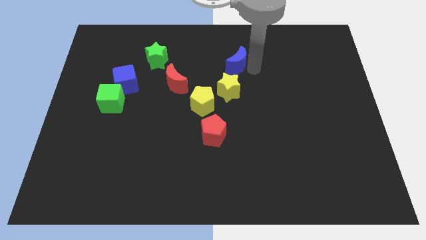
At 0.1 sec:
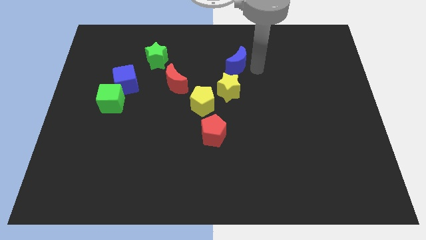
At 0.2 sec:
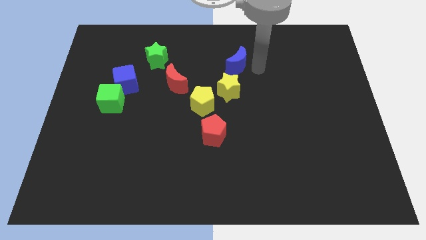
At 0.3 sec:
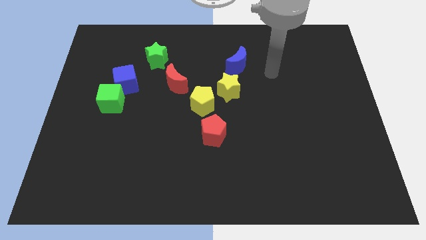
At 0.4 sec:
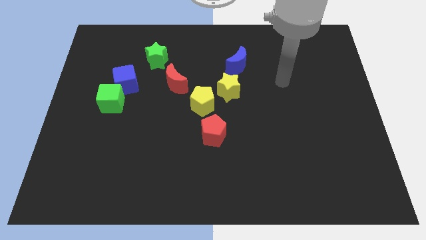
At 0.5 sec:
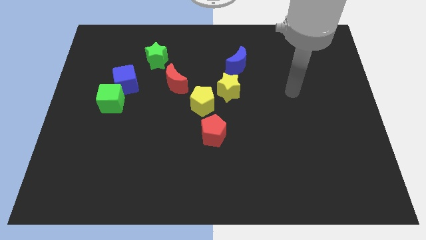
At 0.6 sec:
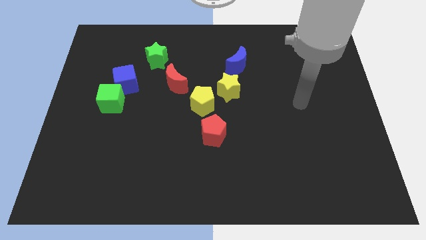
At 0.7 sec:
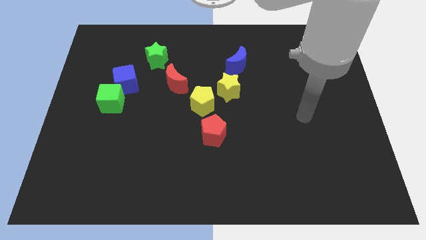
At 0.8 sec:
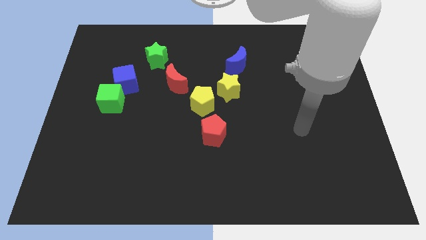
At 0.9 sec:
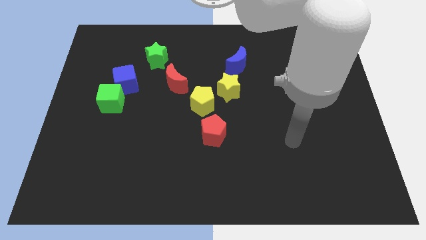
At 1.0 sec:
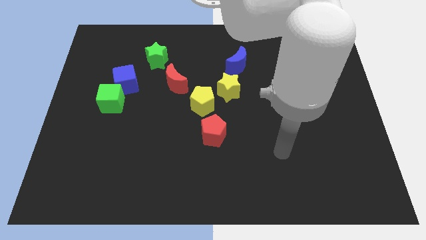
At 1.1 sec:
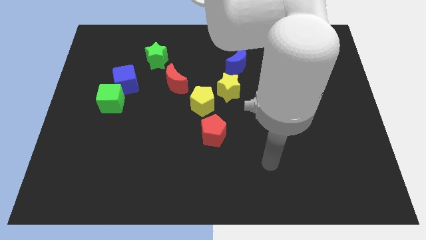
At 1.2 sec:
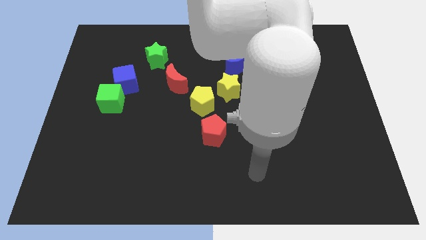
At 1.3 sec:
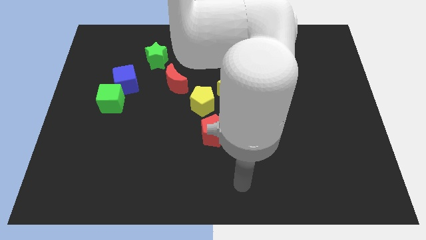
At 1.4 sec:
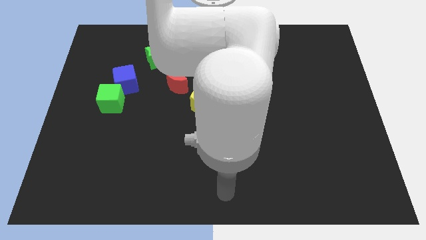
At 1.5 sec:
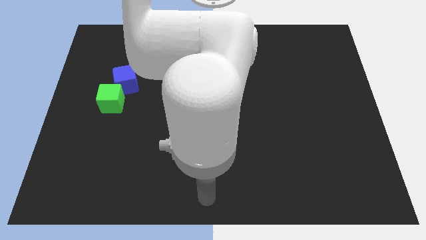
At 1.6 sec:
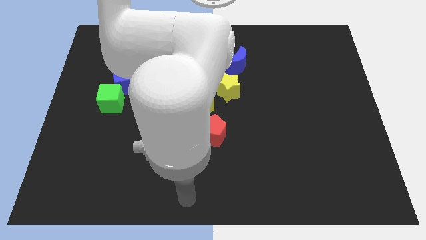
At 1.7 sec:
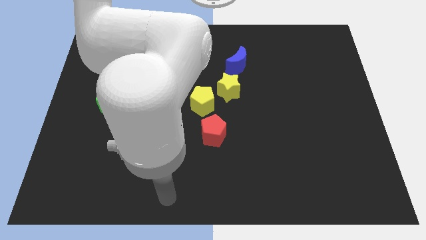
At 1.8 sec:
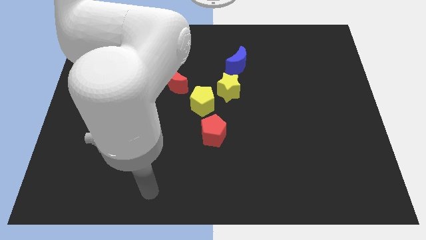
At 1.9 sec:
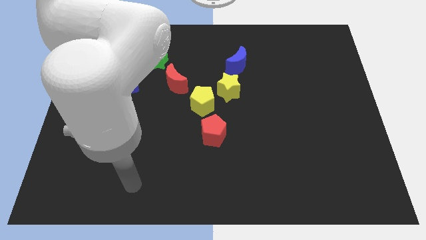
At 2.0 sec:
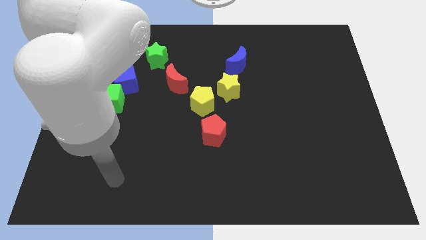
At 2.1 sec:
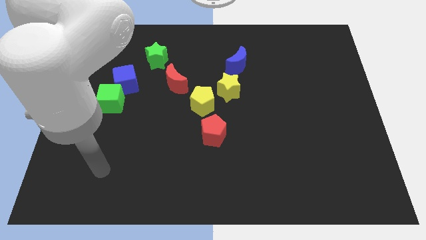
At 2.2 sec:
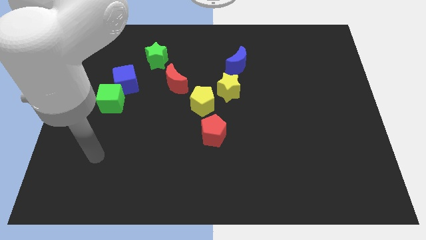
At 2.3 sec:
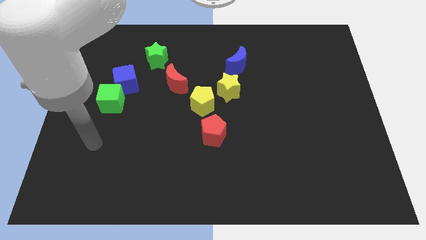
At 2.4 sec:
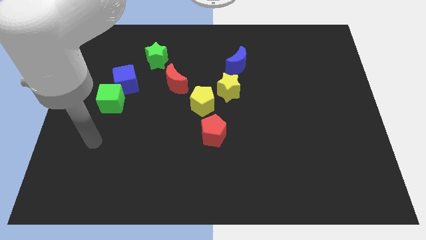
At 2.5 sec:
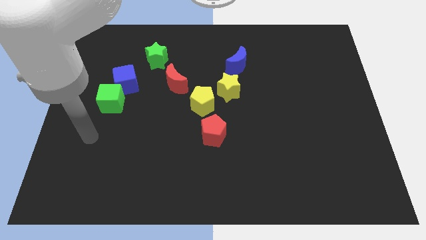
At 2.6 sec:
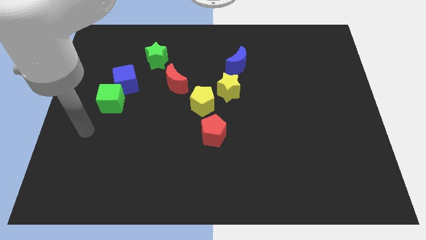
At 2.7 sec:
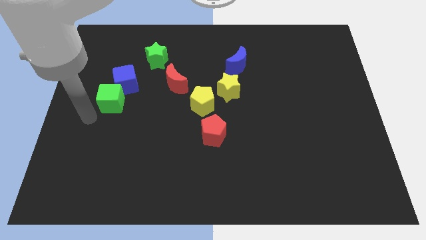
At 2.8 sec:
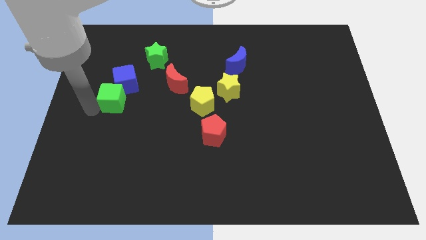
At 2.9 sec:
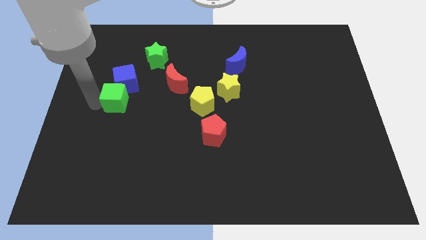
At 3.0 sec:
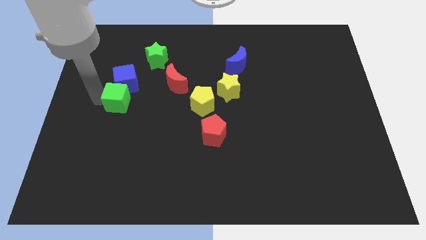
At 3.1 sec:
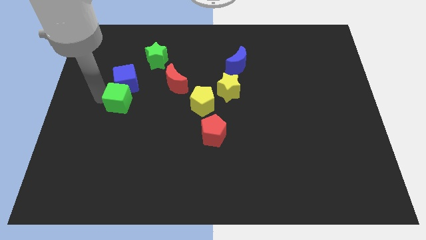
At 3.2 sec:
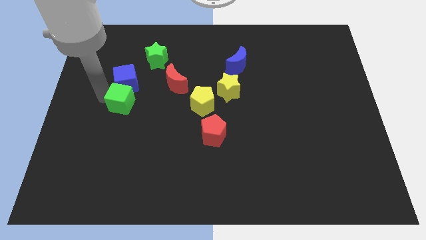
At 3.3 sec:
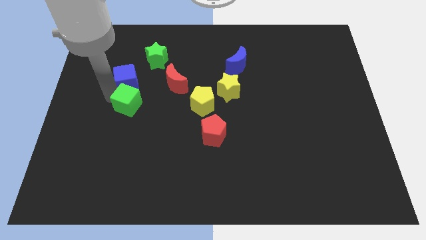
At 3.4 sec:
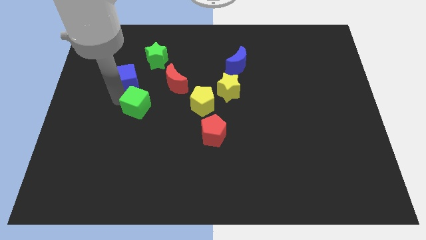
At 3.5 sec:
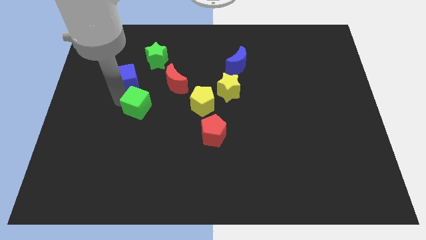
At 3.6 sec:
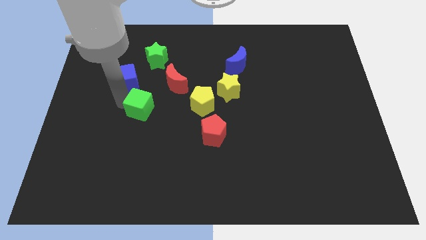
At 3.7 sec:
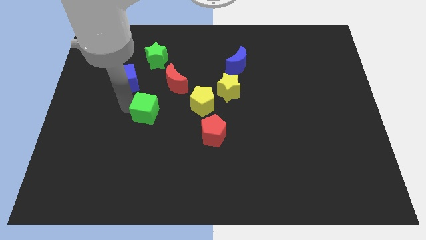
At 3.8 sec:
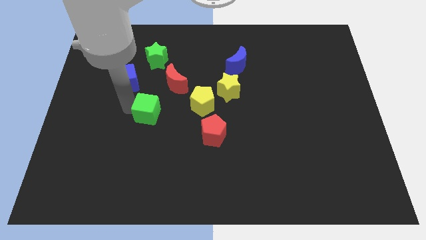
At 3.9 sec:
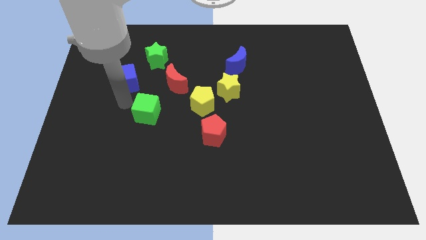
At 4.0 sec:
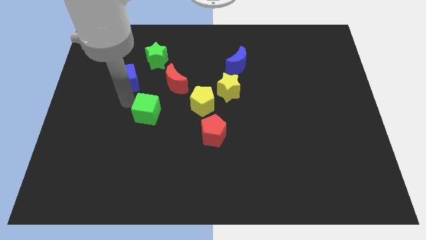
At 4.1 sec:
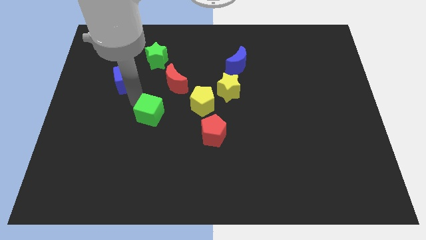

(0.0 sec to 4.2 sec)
place the green cube below the green star

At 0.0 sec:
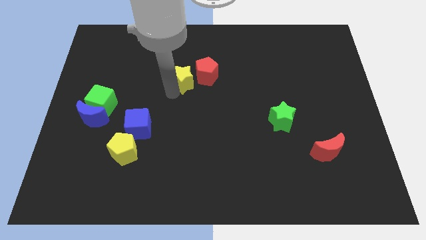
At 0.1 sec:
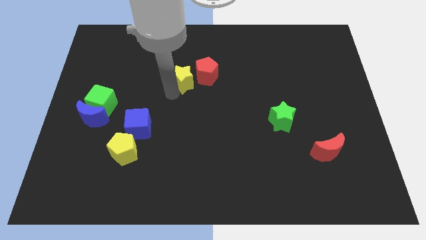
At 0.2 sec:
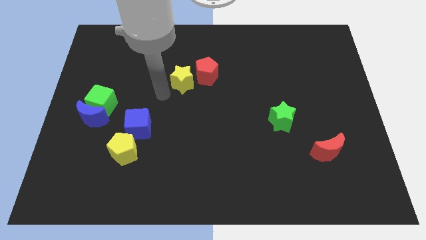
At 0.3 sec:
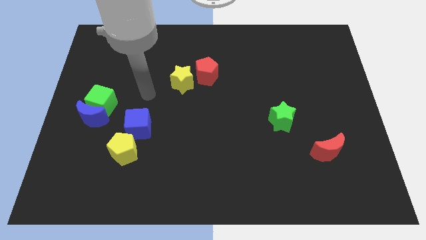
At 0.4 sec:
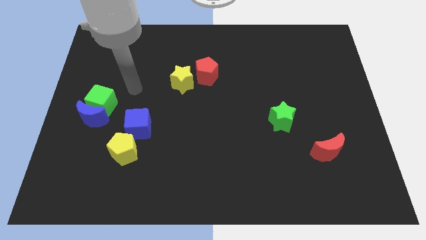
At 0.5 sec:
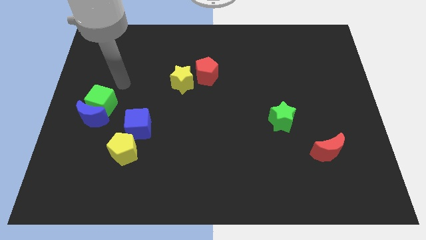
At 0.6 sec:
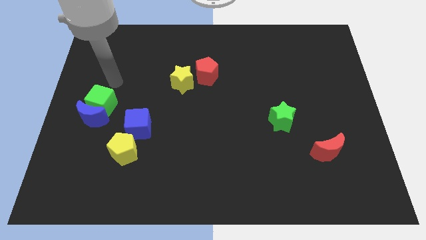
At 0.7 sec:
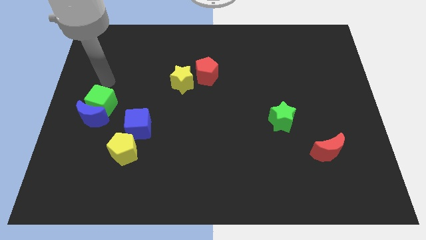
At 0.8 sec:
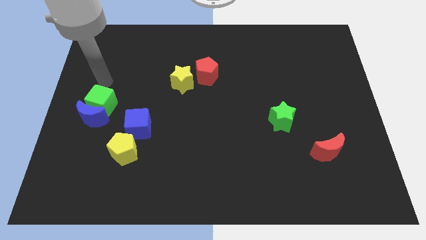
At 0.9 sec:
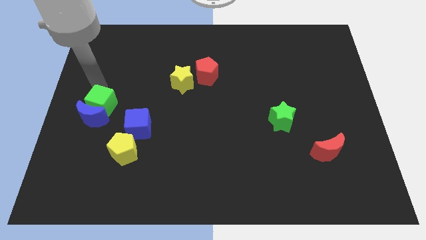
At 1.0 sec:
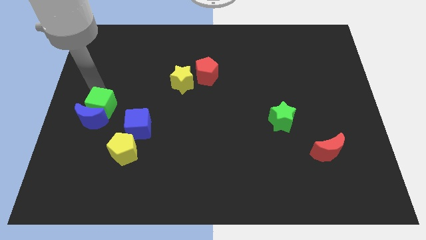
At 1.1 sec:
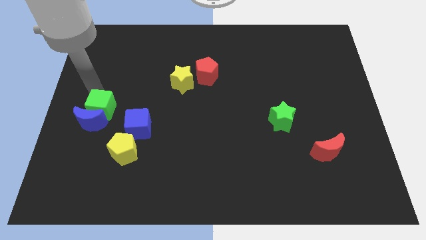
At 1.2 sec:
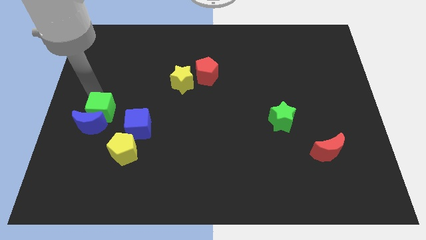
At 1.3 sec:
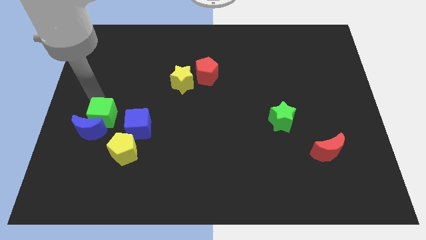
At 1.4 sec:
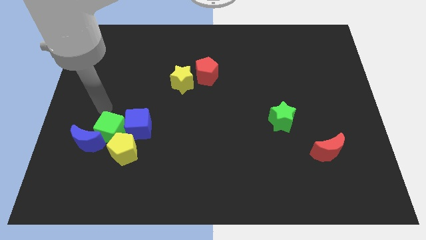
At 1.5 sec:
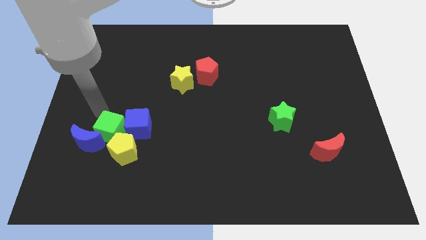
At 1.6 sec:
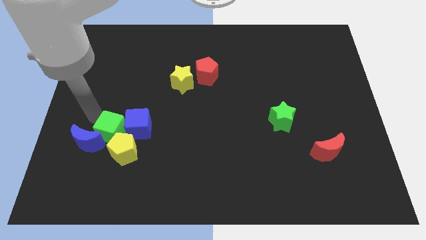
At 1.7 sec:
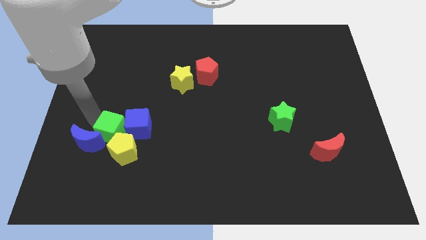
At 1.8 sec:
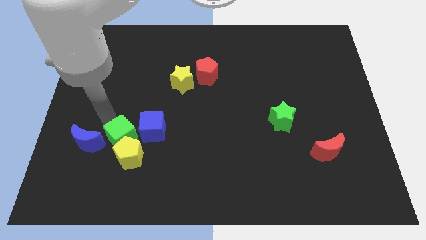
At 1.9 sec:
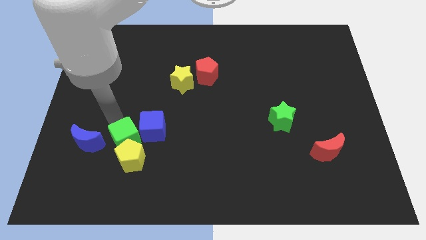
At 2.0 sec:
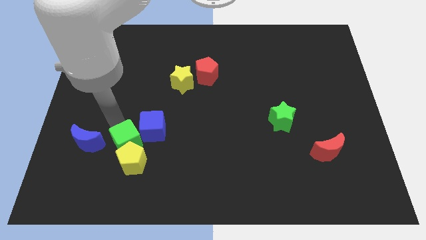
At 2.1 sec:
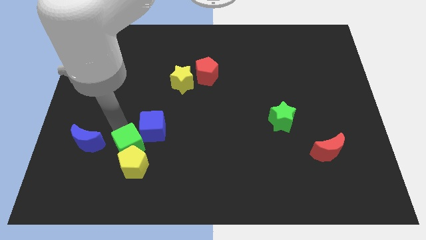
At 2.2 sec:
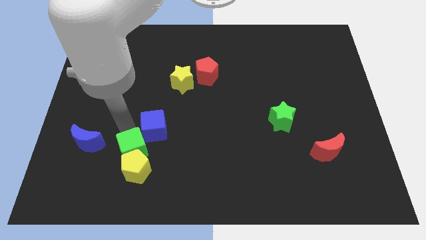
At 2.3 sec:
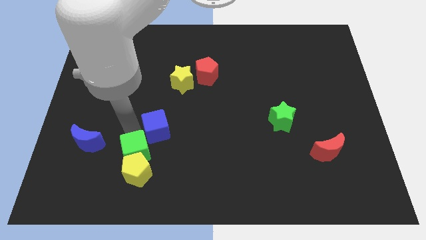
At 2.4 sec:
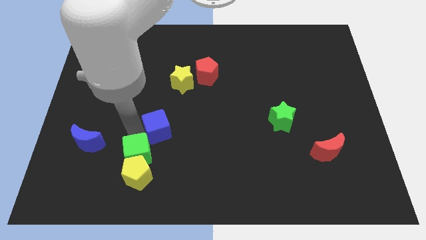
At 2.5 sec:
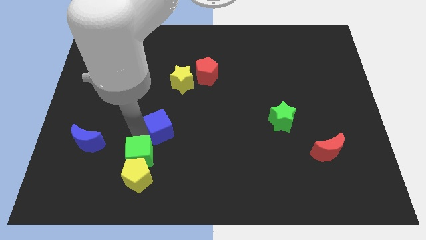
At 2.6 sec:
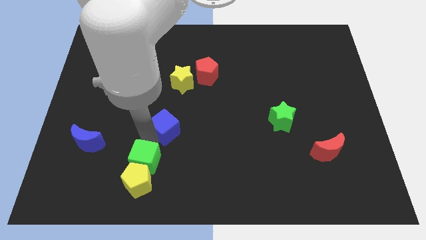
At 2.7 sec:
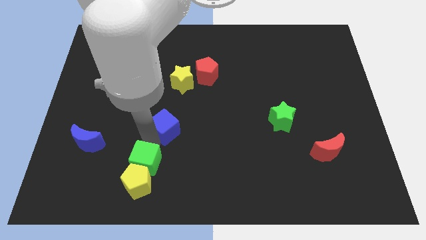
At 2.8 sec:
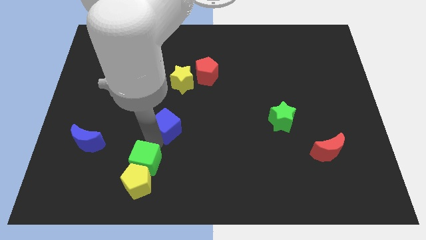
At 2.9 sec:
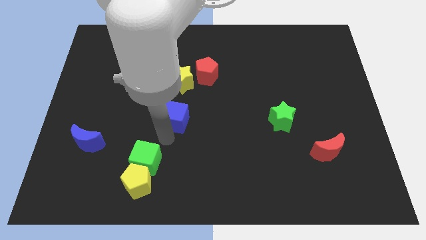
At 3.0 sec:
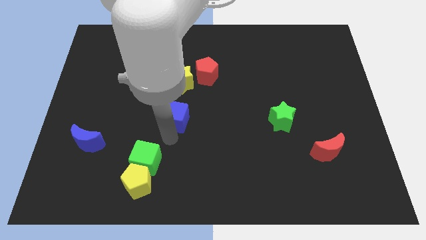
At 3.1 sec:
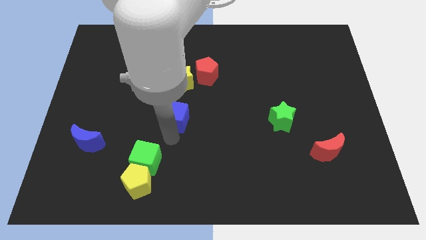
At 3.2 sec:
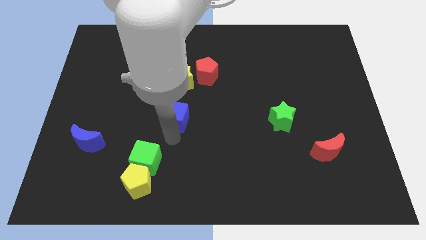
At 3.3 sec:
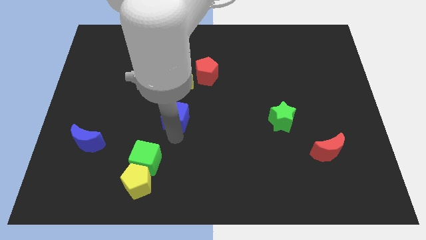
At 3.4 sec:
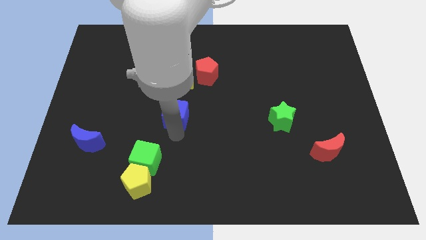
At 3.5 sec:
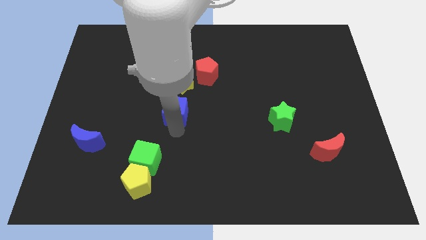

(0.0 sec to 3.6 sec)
drag the green cube slightly downwards

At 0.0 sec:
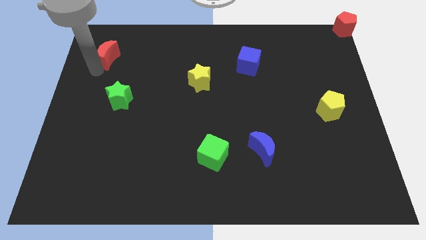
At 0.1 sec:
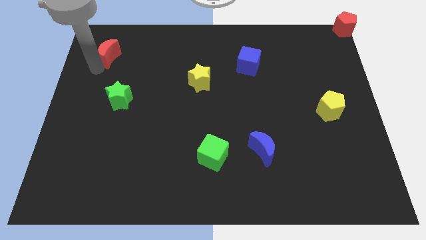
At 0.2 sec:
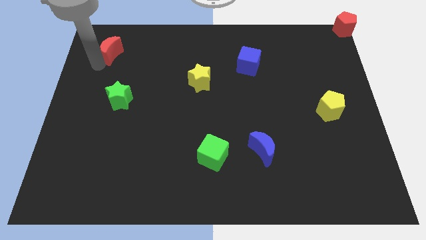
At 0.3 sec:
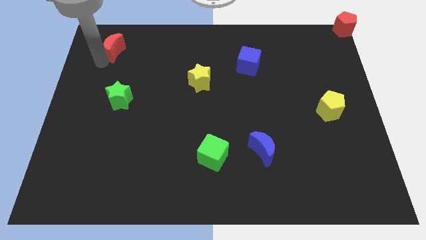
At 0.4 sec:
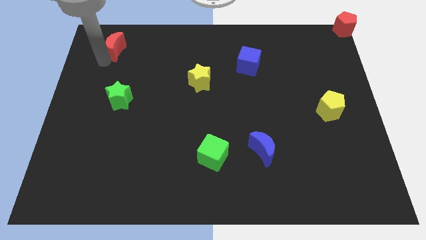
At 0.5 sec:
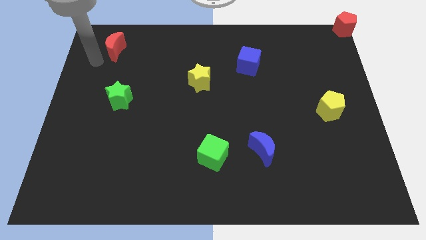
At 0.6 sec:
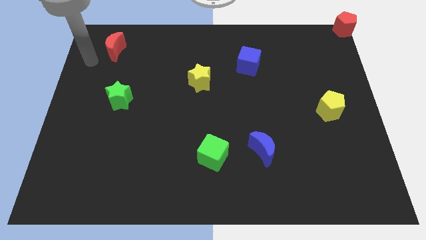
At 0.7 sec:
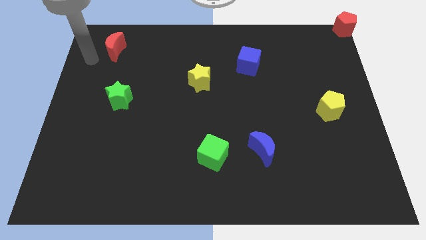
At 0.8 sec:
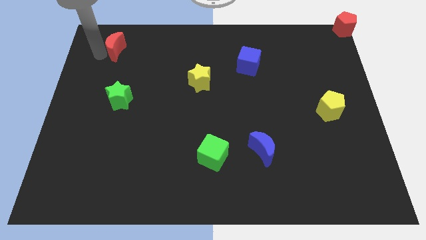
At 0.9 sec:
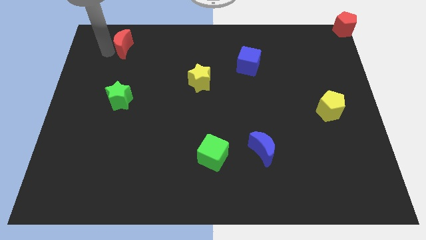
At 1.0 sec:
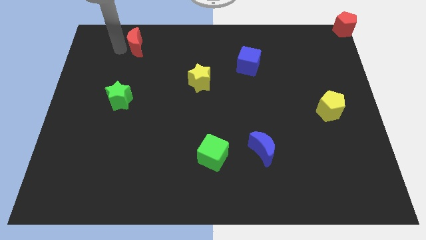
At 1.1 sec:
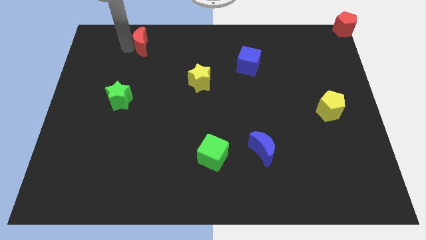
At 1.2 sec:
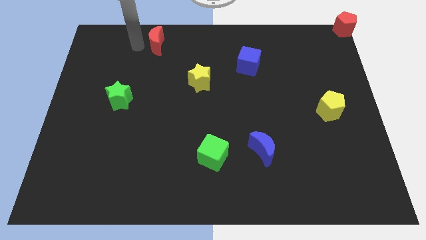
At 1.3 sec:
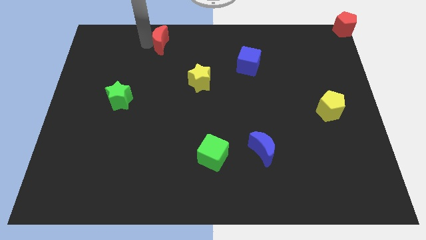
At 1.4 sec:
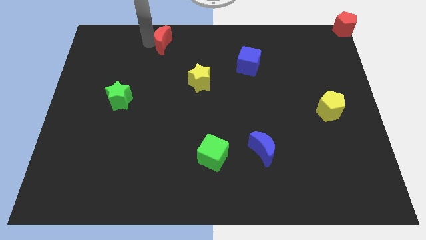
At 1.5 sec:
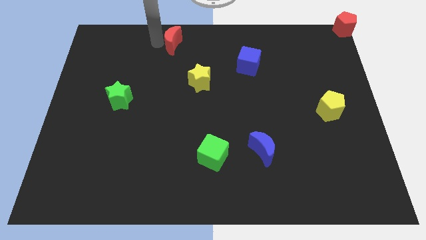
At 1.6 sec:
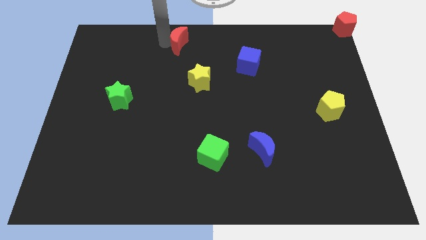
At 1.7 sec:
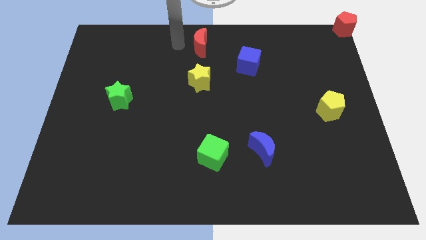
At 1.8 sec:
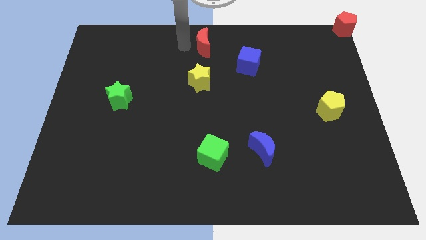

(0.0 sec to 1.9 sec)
move the red crescent to the top of the yellow star
